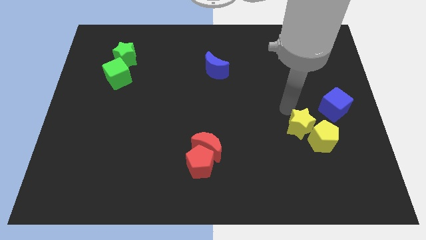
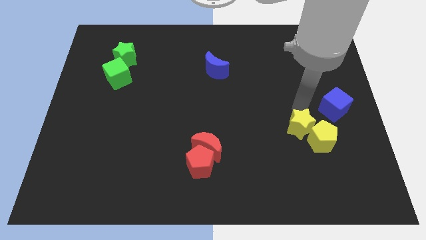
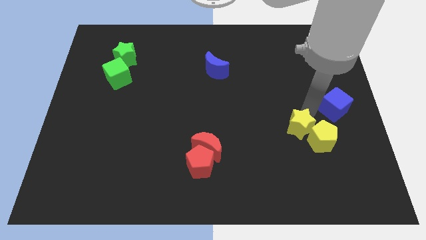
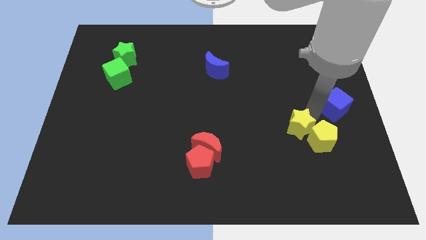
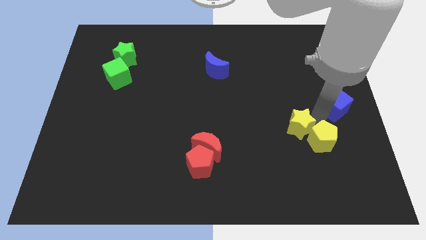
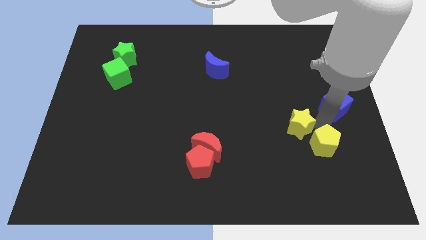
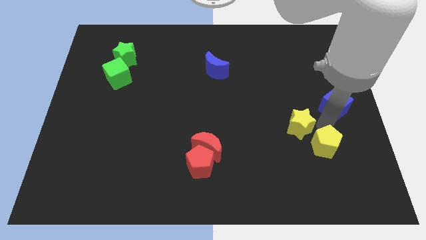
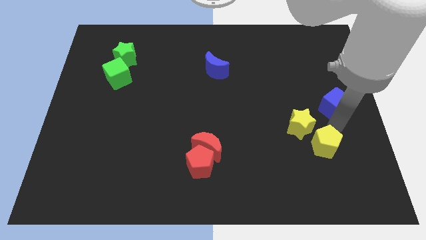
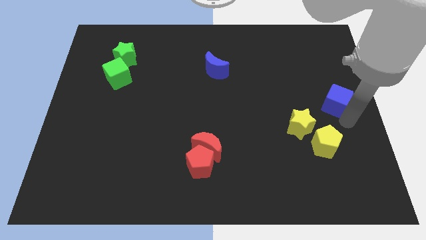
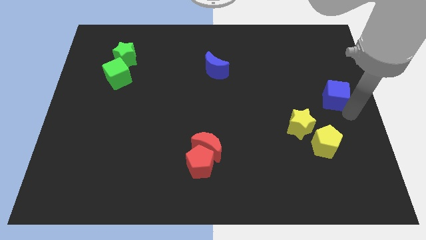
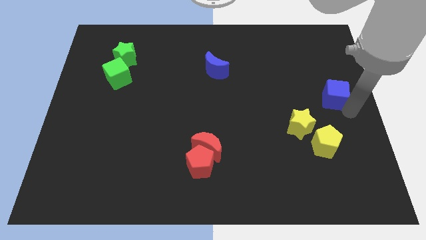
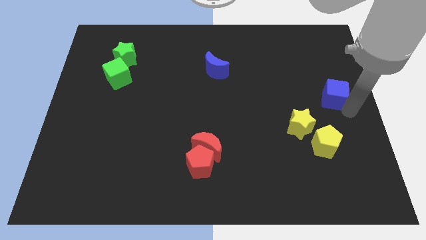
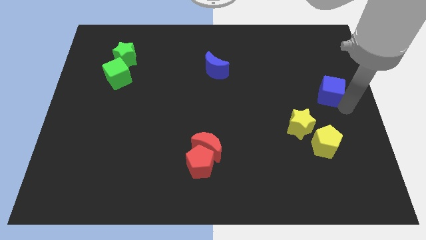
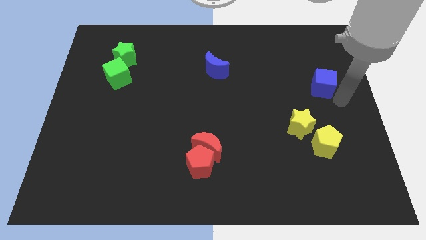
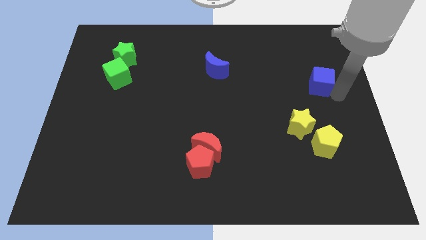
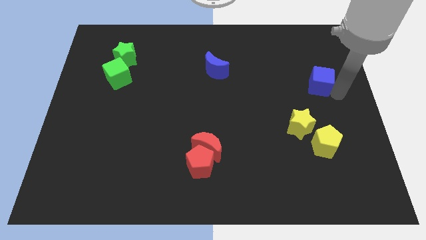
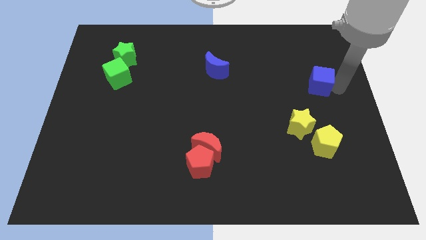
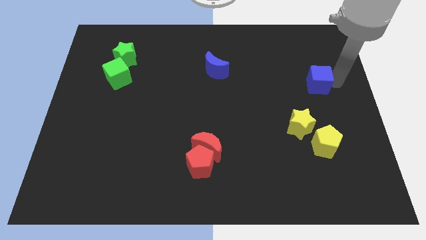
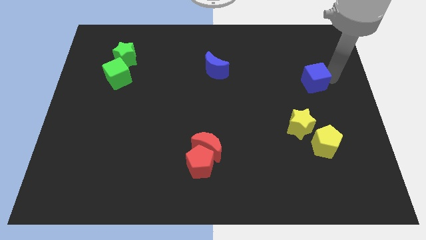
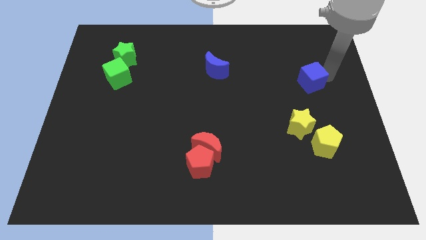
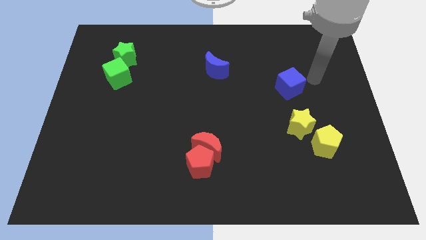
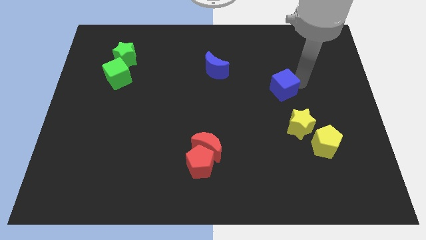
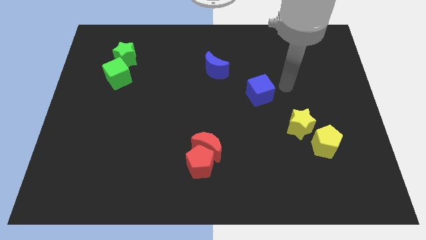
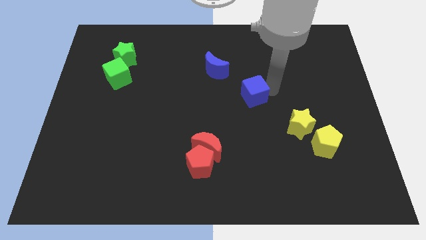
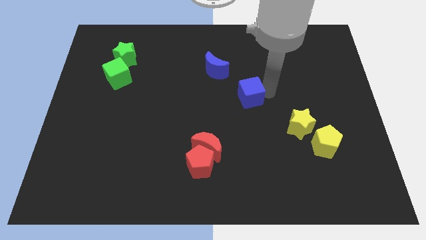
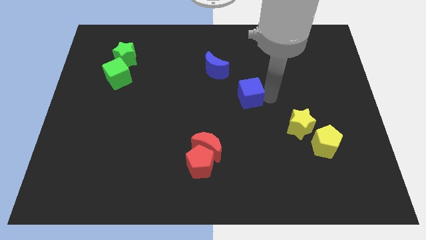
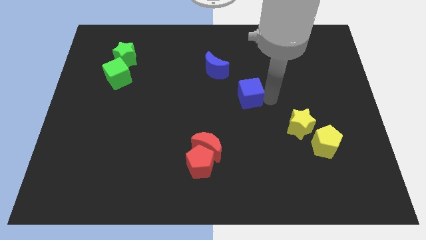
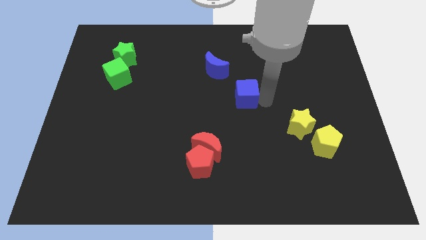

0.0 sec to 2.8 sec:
place the blue cube diagonal to the blue moon

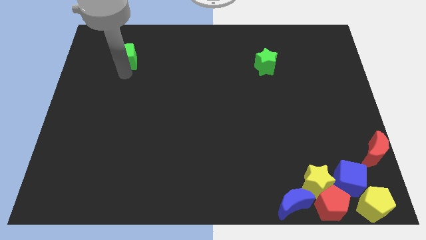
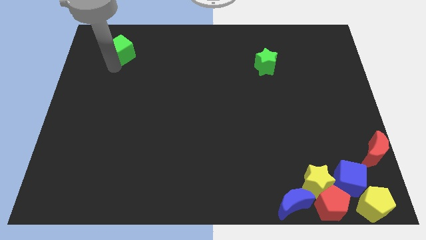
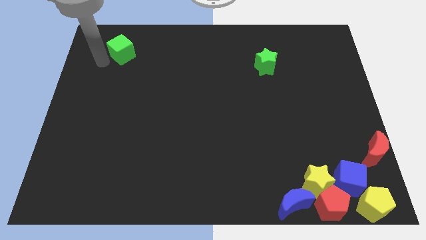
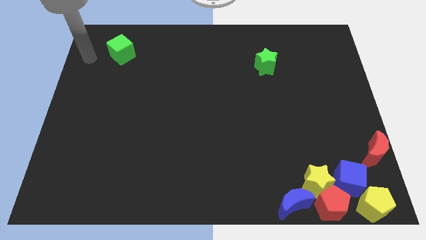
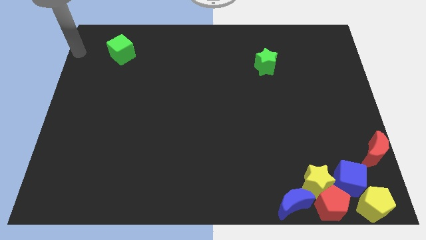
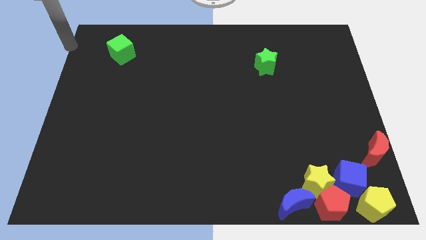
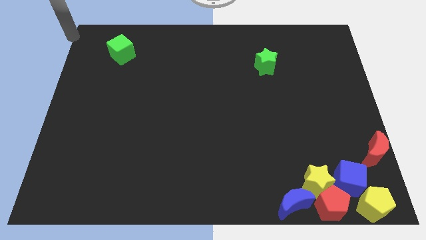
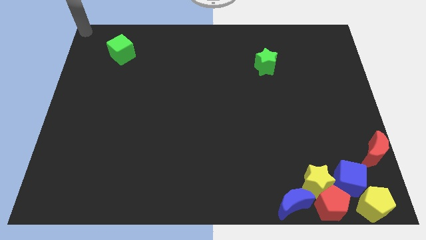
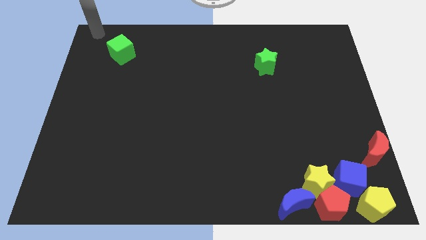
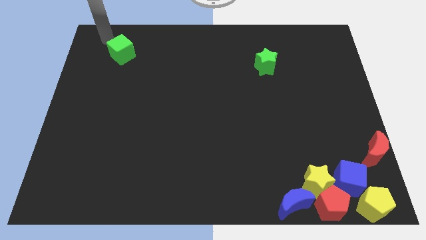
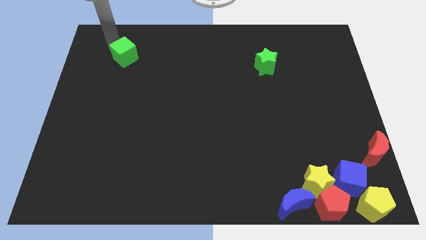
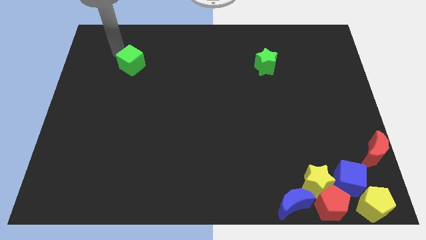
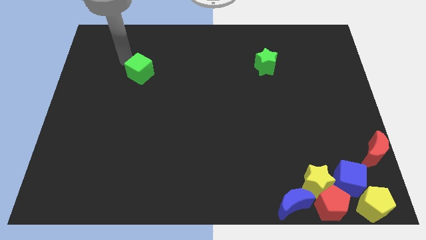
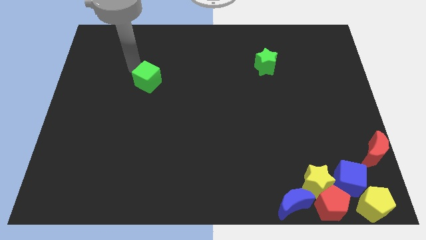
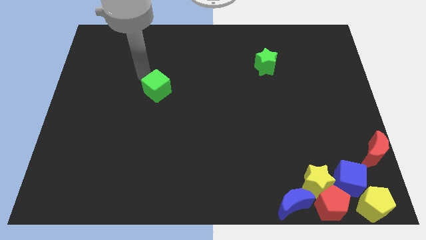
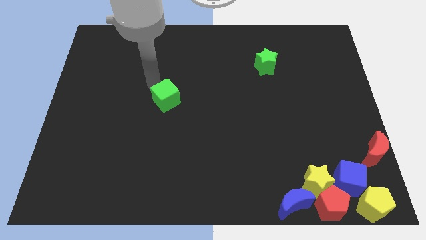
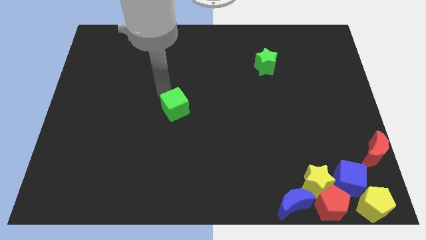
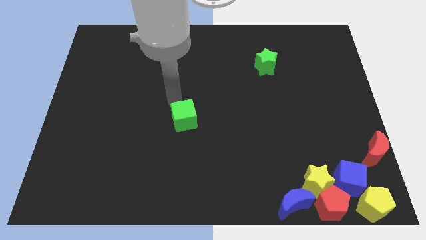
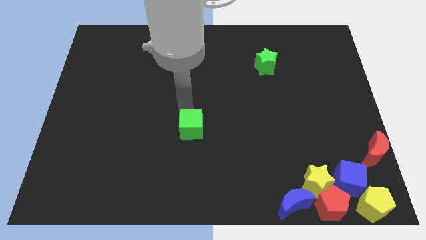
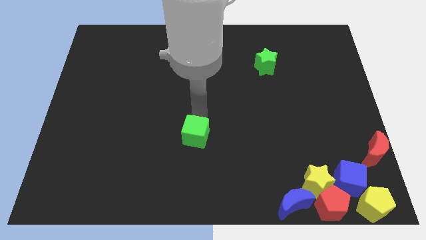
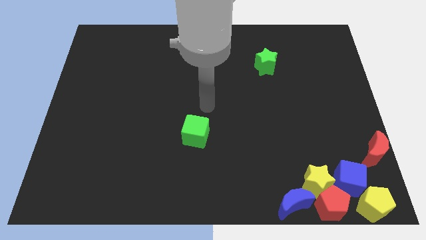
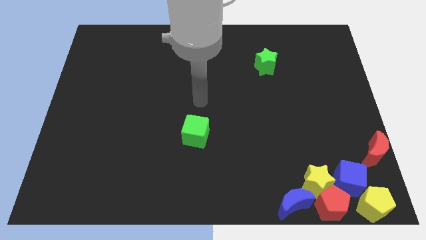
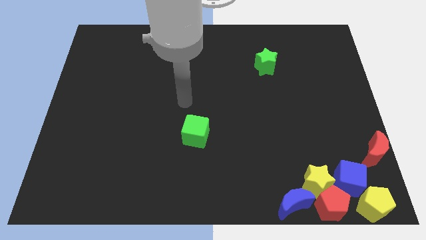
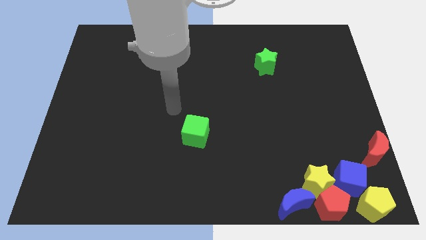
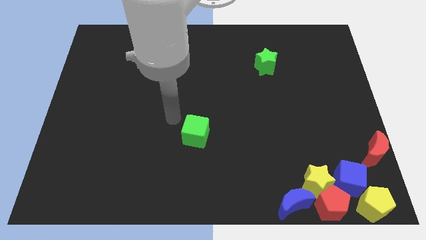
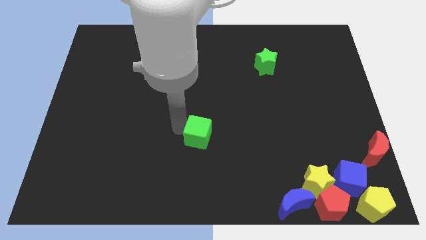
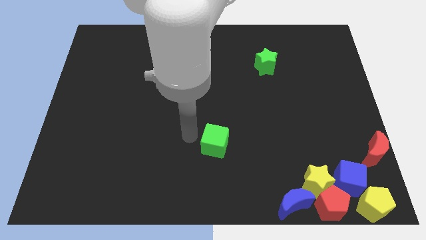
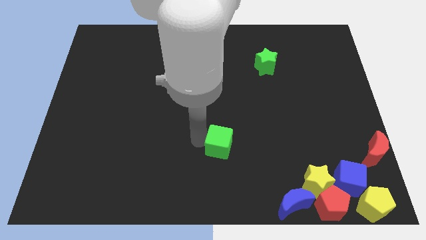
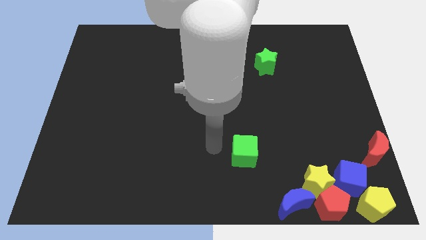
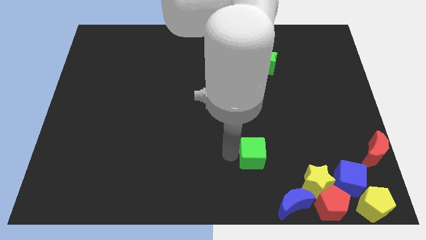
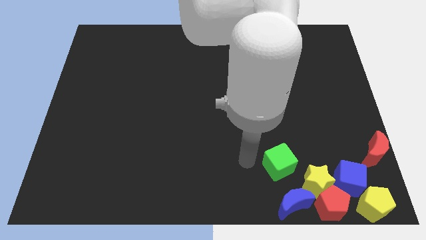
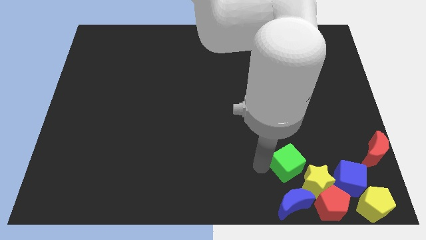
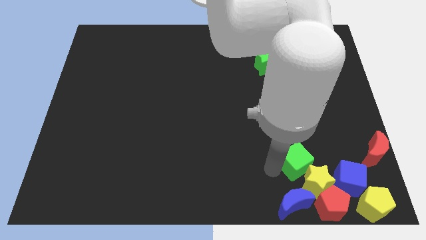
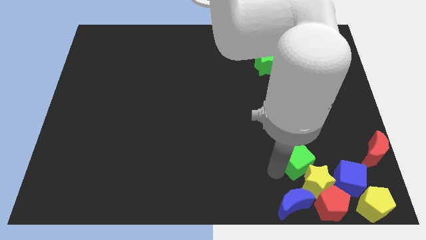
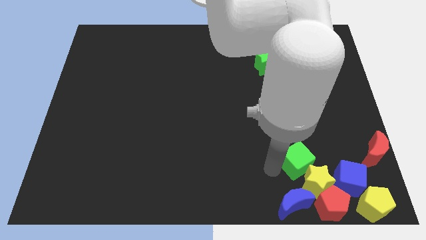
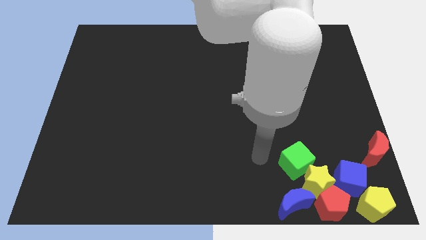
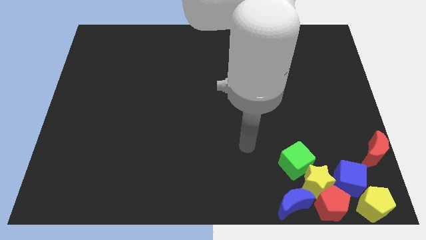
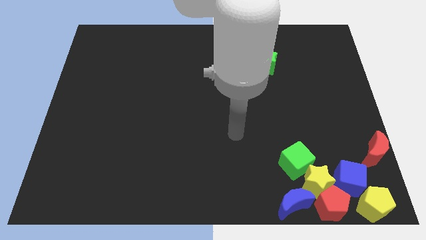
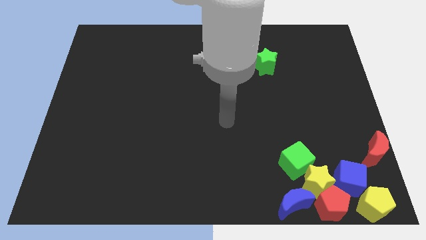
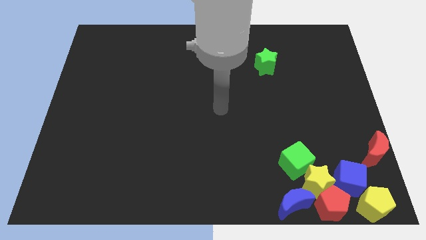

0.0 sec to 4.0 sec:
move the green cube into the top left side of the yellow star

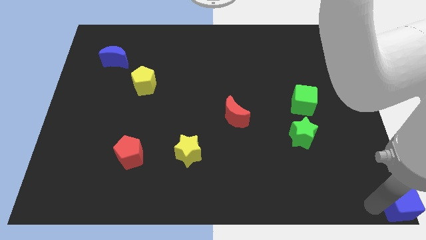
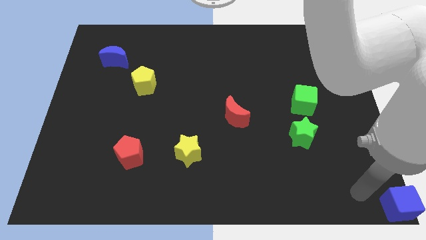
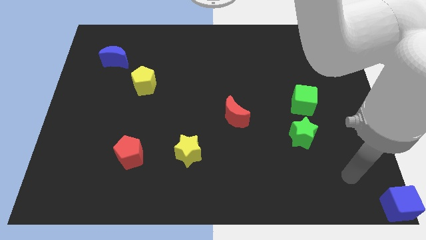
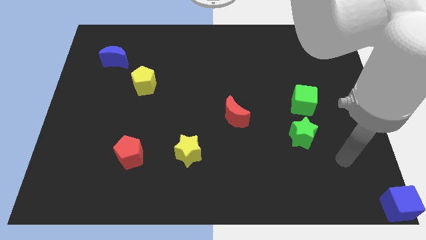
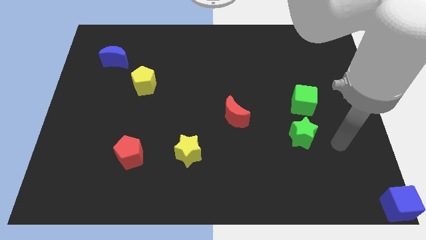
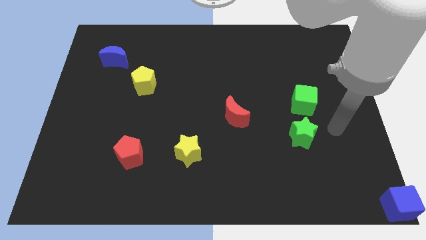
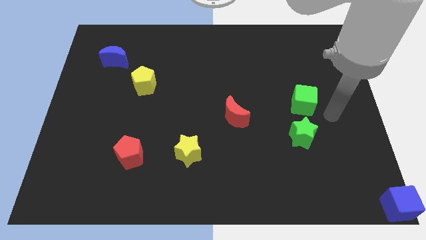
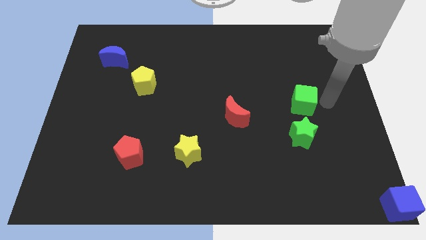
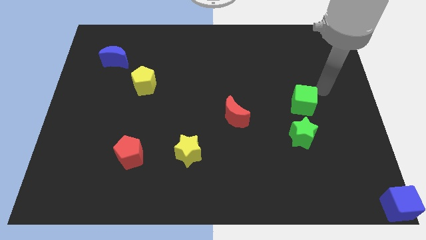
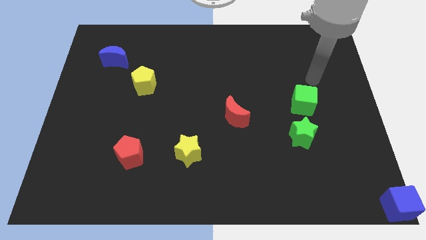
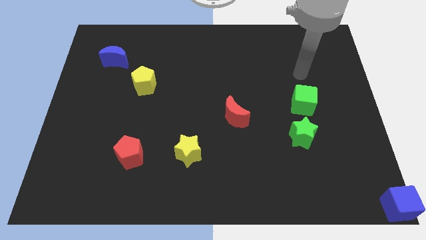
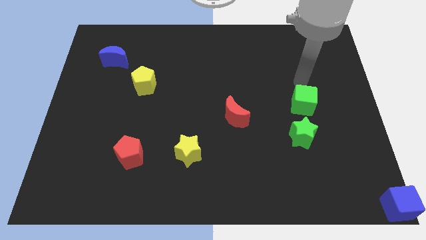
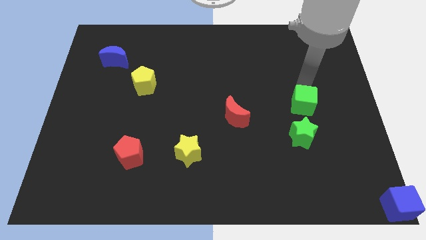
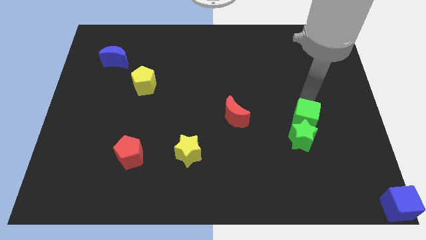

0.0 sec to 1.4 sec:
push the green cube into the green star

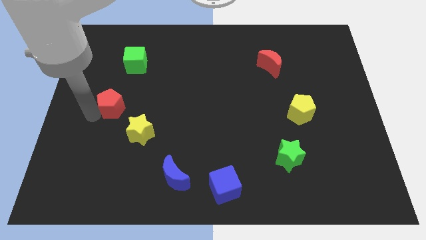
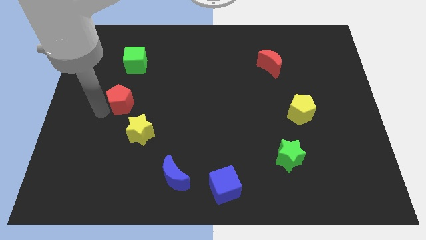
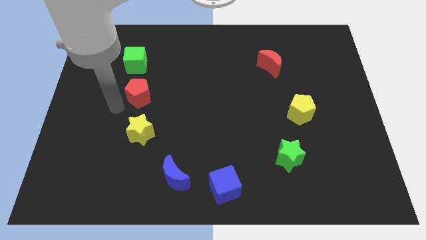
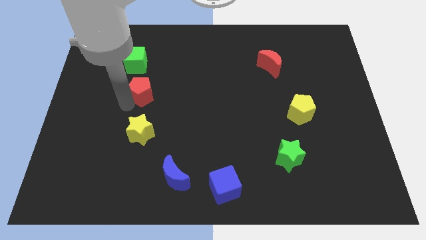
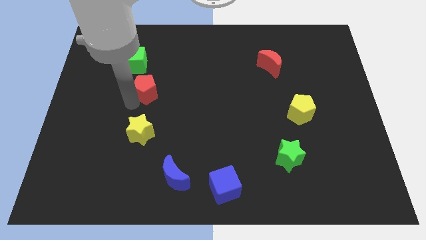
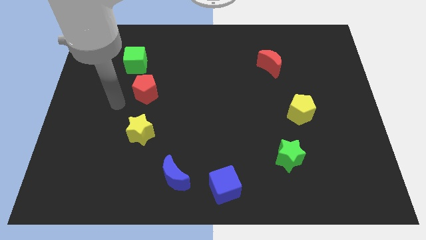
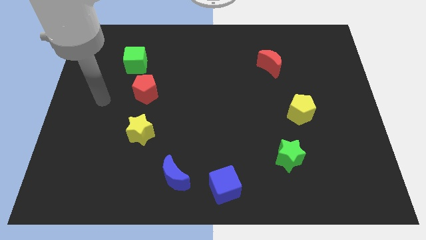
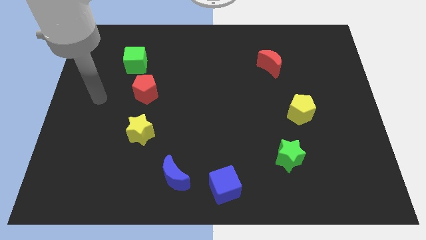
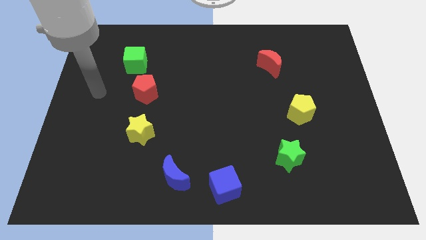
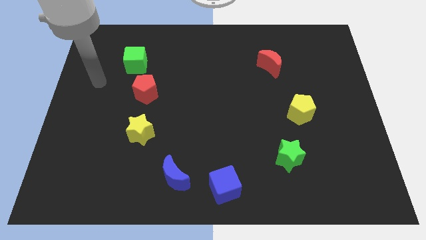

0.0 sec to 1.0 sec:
place the red pentagon in between the green cube and the yellow star to form vertical line
